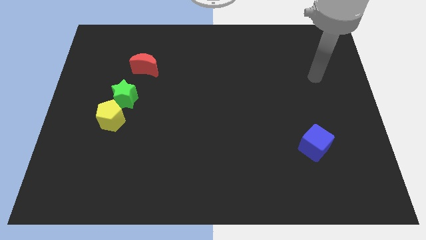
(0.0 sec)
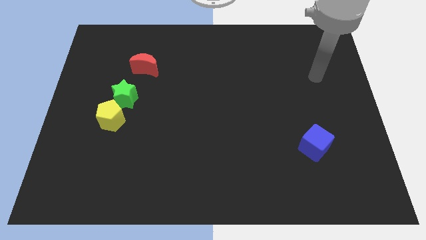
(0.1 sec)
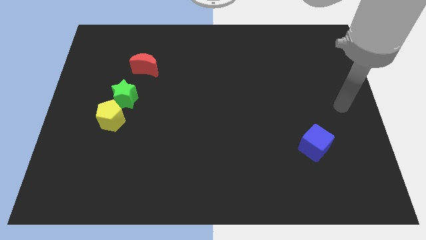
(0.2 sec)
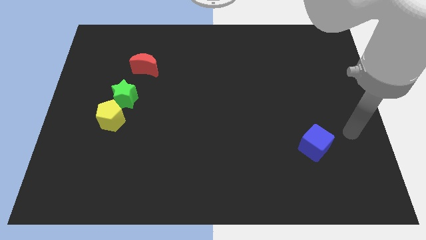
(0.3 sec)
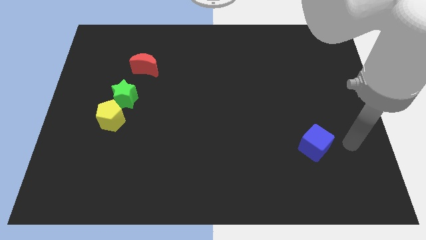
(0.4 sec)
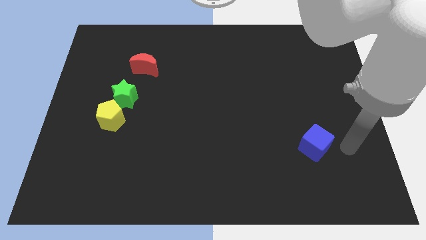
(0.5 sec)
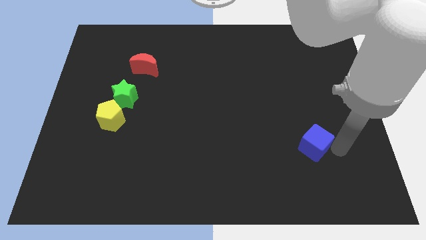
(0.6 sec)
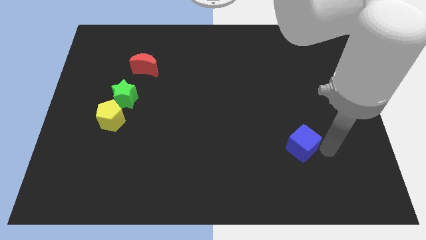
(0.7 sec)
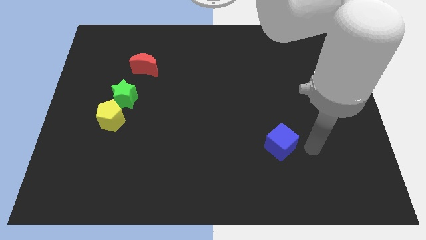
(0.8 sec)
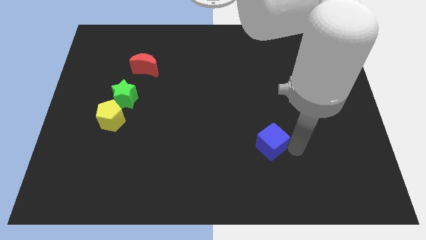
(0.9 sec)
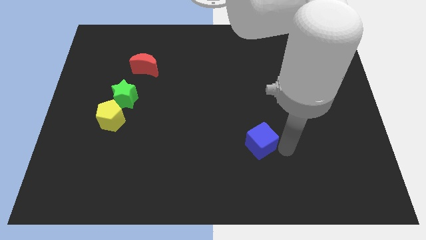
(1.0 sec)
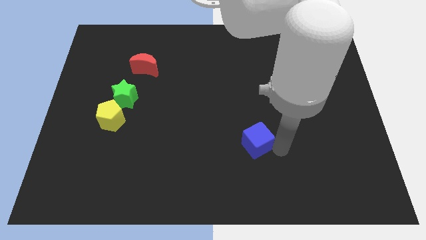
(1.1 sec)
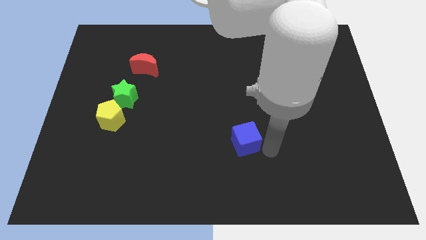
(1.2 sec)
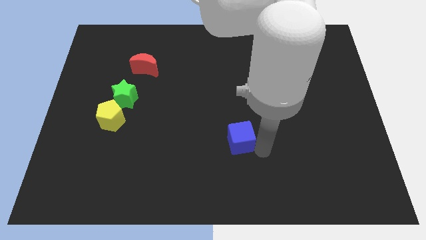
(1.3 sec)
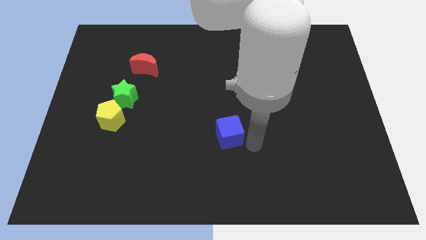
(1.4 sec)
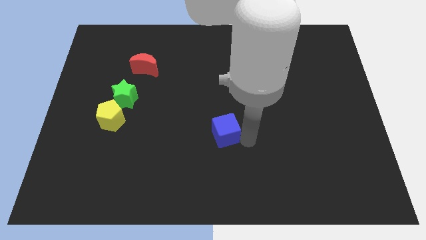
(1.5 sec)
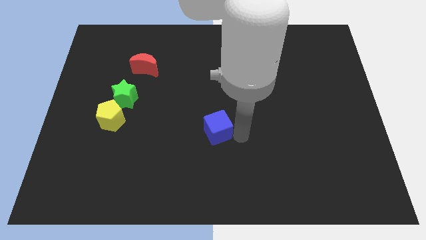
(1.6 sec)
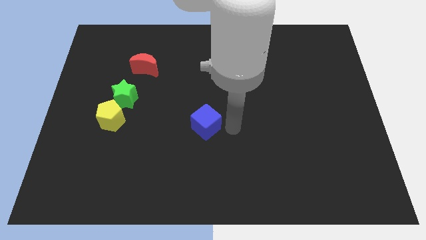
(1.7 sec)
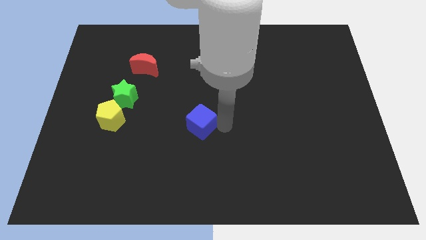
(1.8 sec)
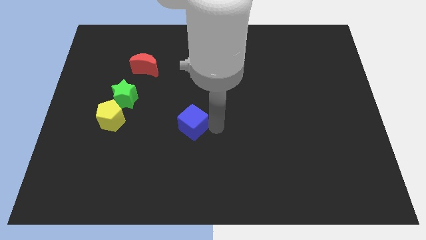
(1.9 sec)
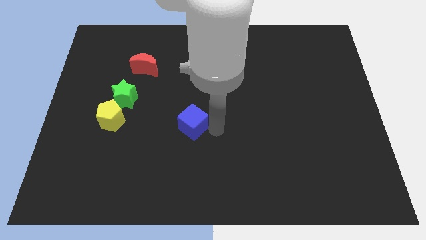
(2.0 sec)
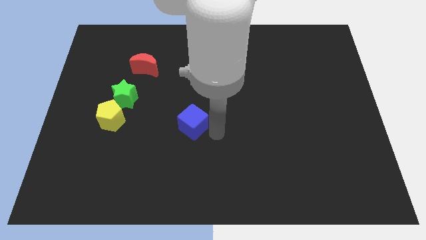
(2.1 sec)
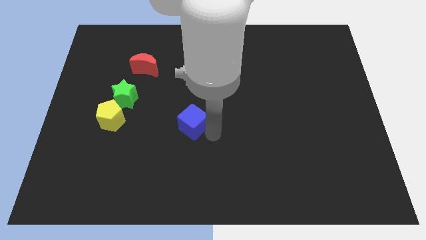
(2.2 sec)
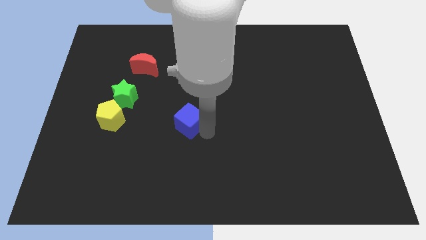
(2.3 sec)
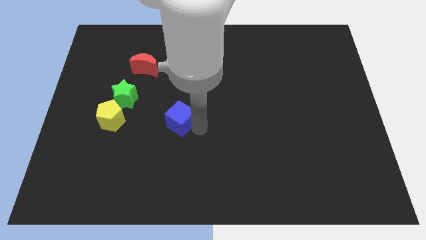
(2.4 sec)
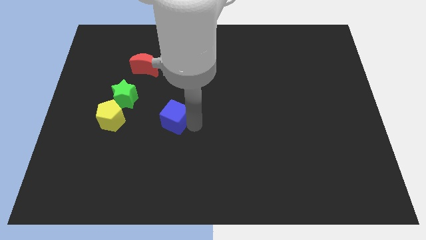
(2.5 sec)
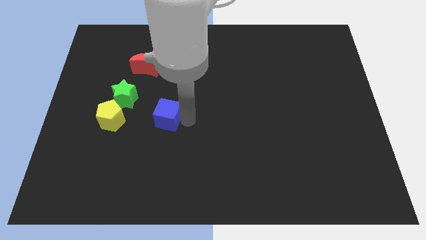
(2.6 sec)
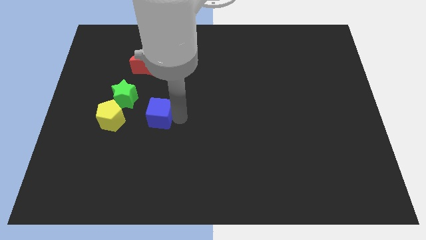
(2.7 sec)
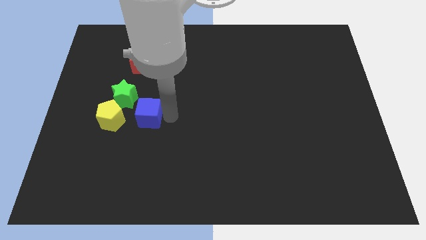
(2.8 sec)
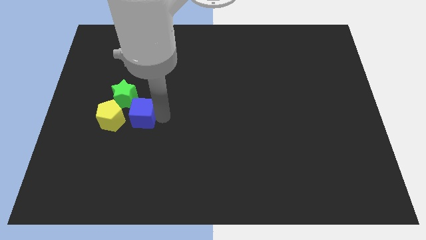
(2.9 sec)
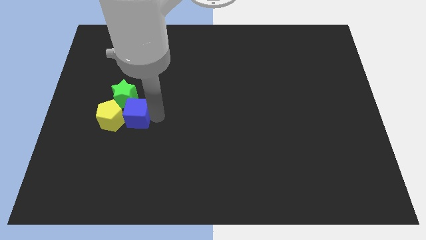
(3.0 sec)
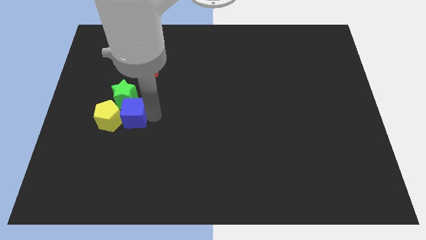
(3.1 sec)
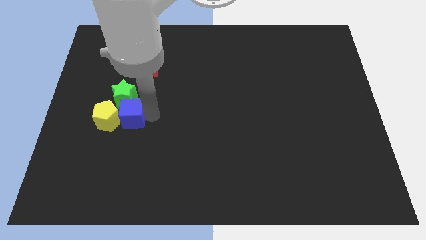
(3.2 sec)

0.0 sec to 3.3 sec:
move the blue cube next to the star

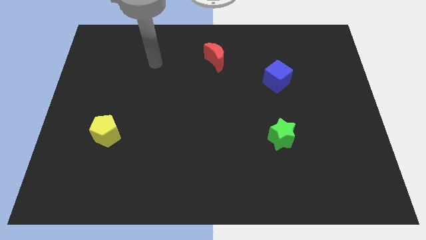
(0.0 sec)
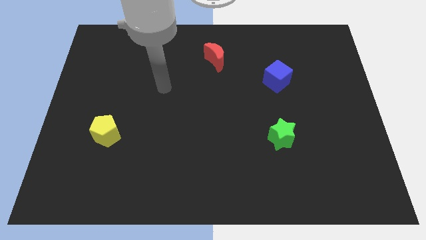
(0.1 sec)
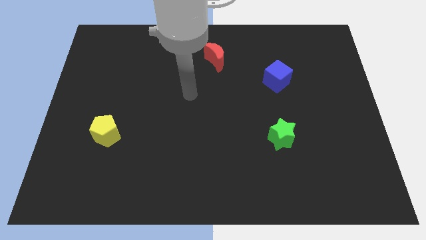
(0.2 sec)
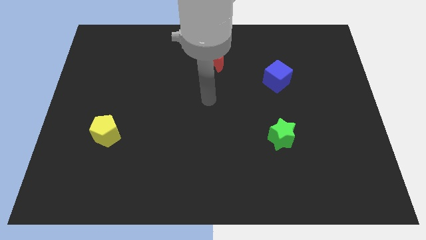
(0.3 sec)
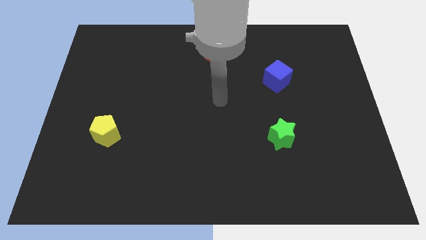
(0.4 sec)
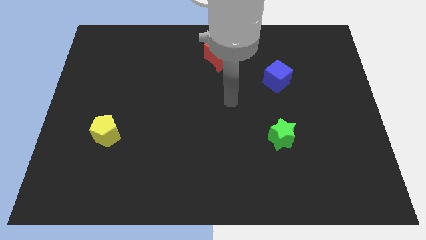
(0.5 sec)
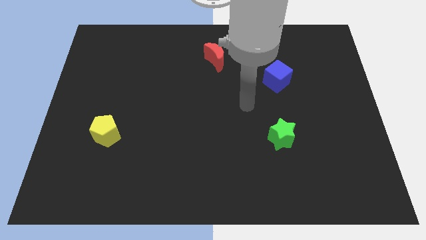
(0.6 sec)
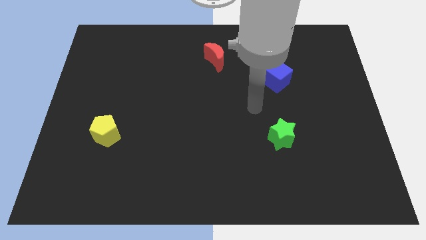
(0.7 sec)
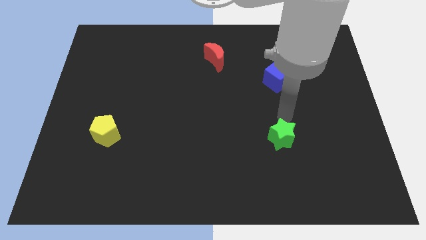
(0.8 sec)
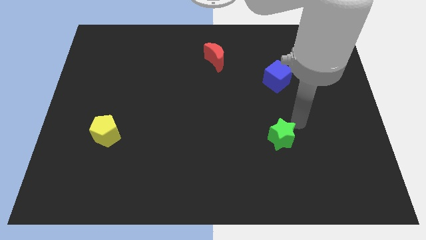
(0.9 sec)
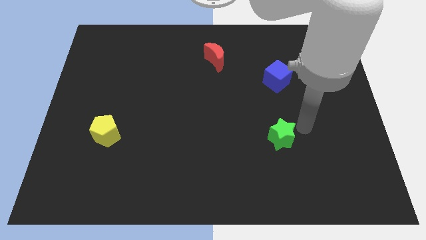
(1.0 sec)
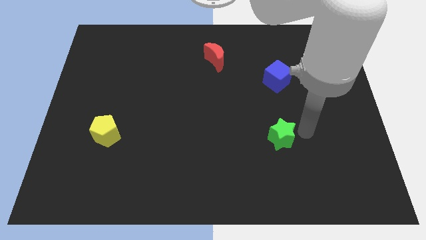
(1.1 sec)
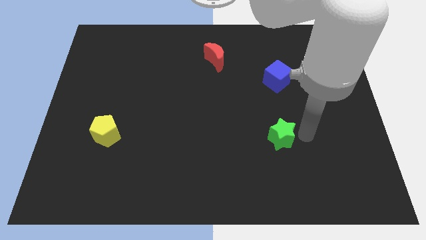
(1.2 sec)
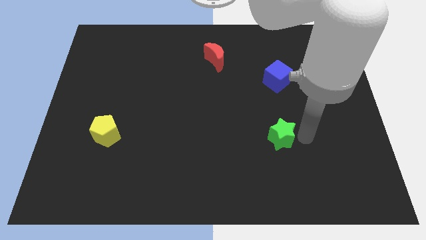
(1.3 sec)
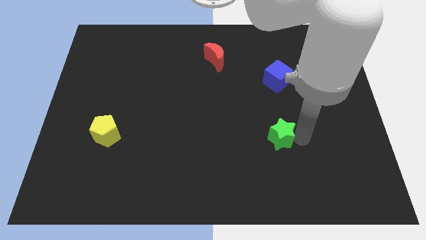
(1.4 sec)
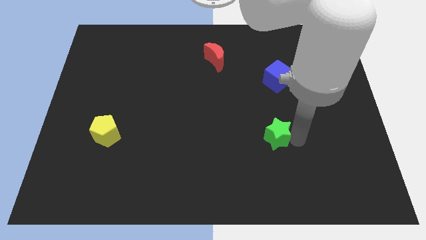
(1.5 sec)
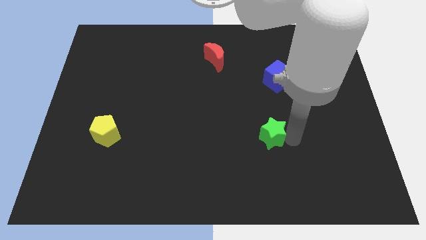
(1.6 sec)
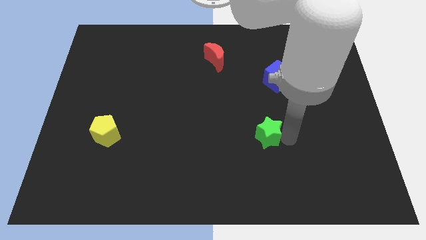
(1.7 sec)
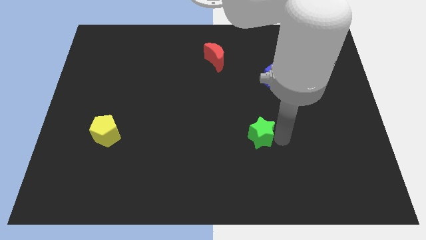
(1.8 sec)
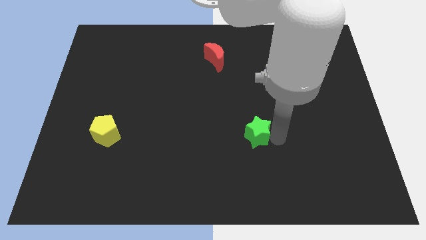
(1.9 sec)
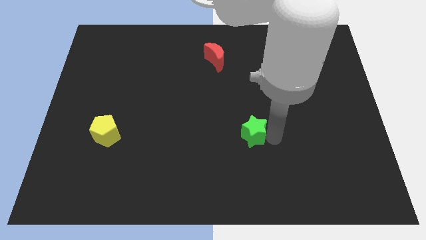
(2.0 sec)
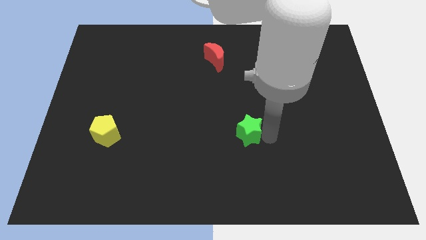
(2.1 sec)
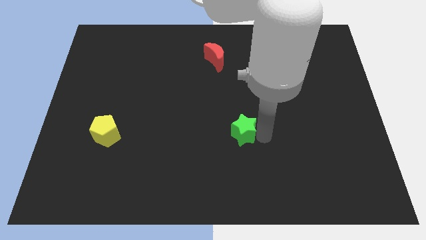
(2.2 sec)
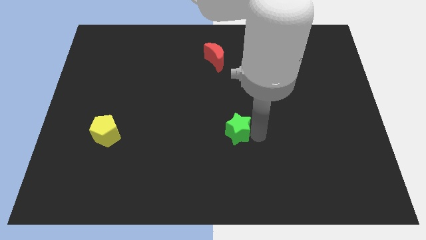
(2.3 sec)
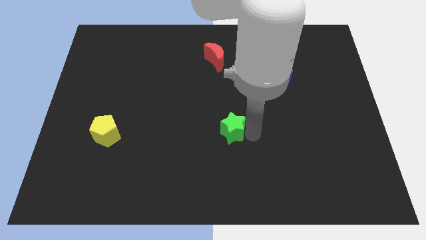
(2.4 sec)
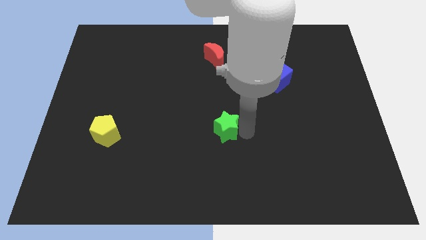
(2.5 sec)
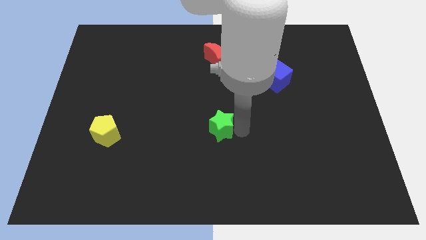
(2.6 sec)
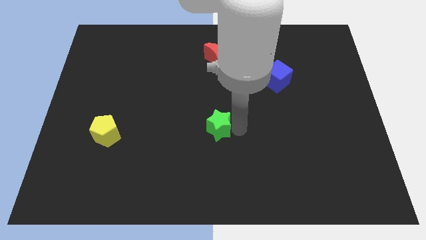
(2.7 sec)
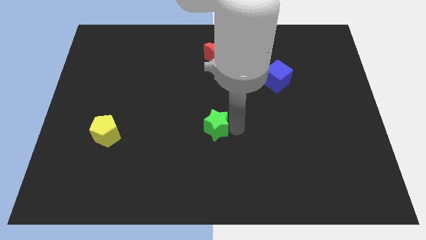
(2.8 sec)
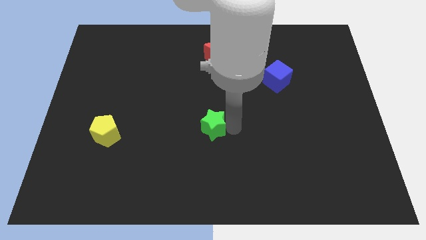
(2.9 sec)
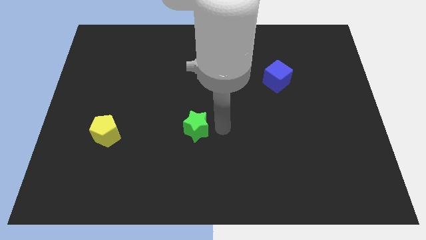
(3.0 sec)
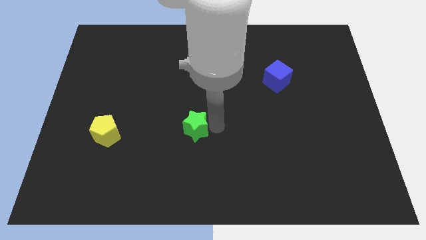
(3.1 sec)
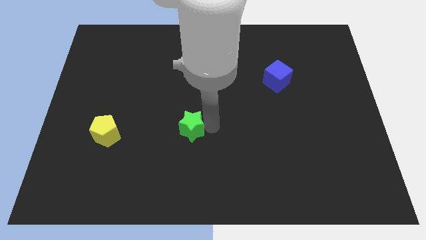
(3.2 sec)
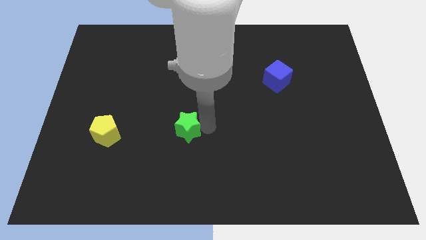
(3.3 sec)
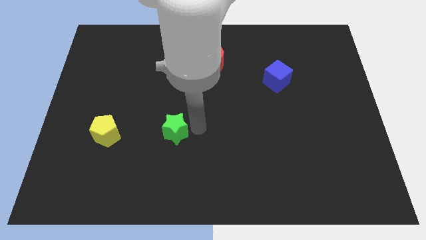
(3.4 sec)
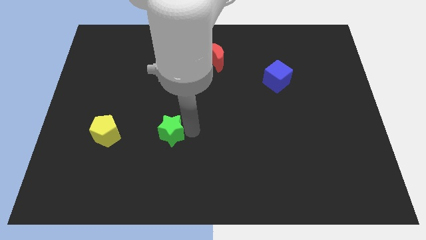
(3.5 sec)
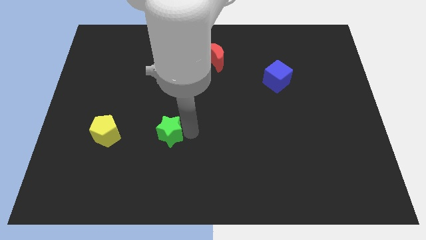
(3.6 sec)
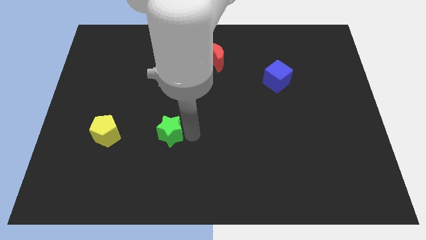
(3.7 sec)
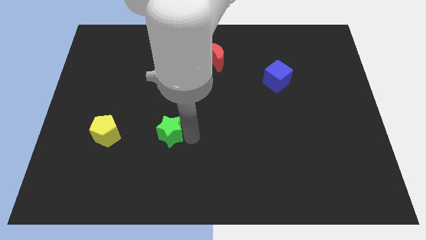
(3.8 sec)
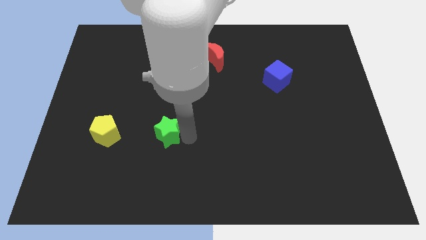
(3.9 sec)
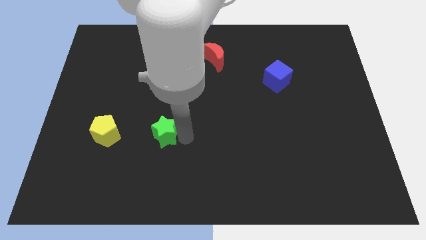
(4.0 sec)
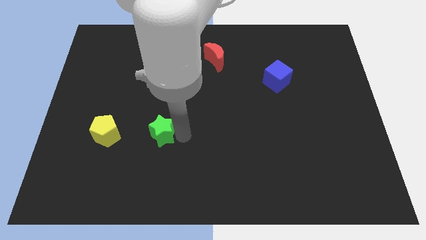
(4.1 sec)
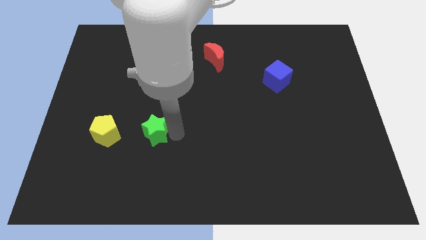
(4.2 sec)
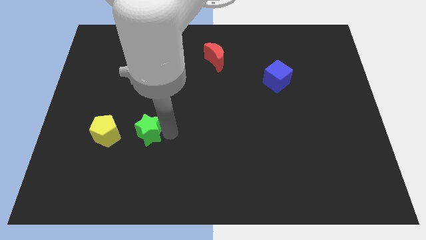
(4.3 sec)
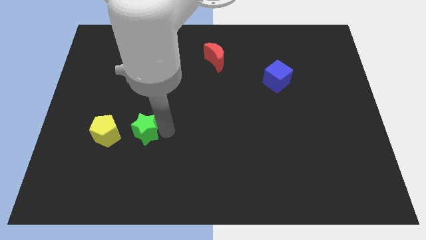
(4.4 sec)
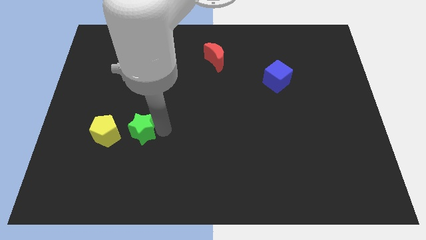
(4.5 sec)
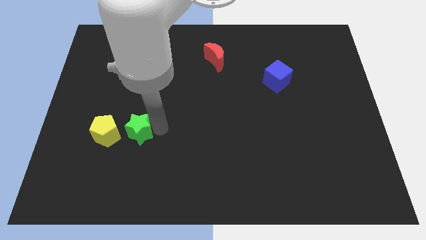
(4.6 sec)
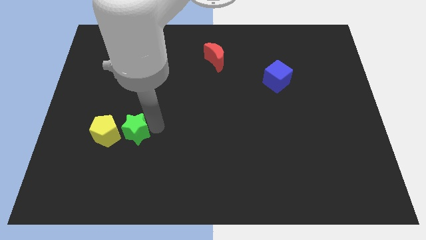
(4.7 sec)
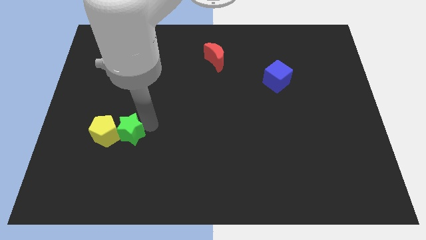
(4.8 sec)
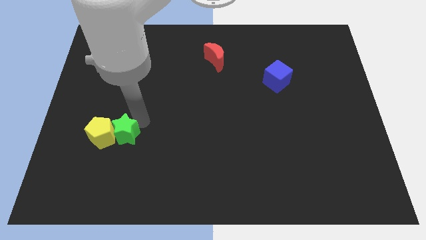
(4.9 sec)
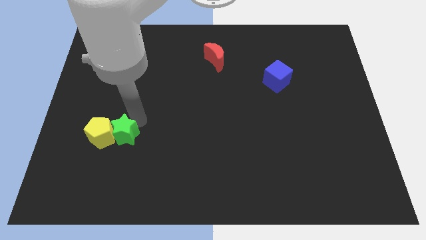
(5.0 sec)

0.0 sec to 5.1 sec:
slide the green star towards the yellow pentagon

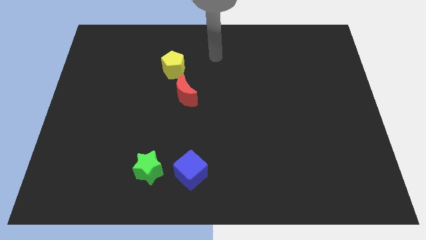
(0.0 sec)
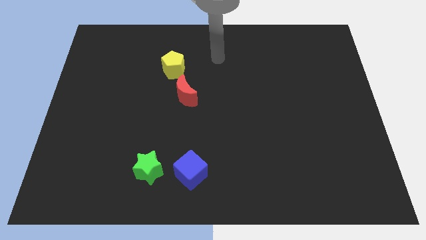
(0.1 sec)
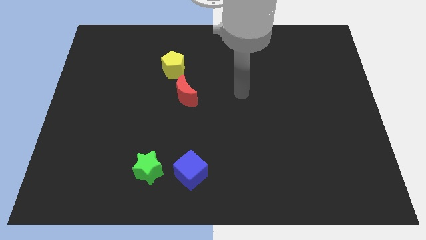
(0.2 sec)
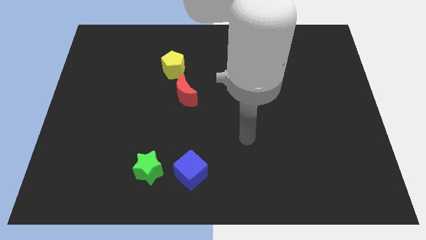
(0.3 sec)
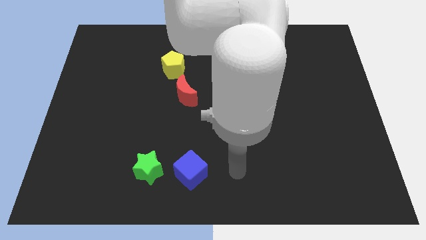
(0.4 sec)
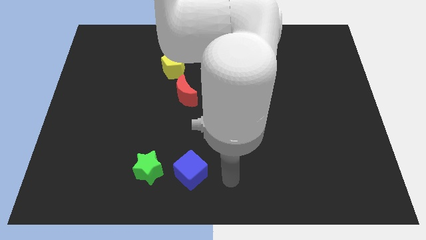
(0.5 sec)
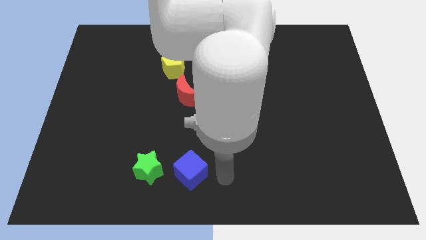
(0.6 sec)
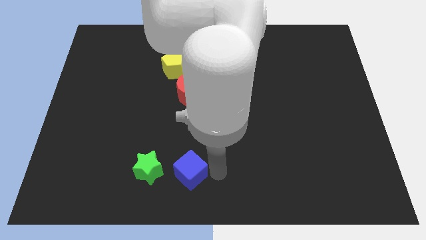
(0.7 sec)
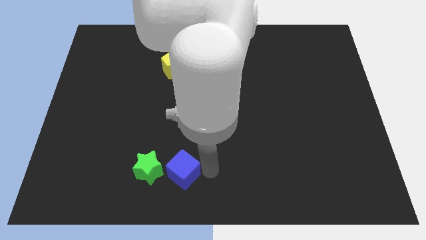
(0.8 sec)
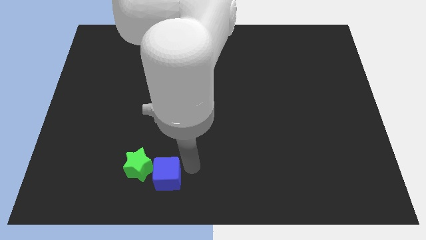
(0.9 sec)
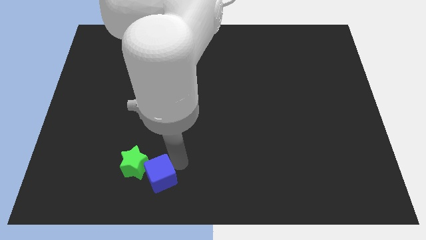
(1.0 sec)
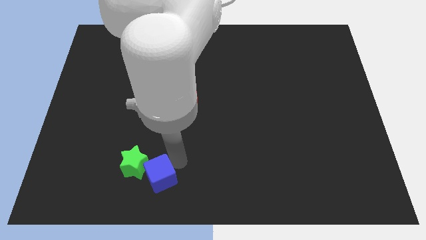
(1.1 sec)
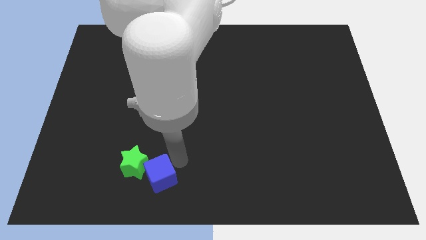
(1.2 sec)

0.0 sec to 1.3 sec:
move the blue cube next to the green star
